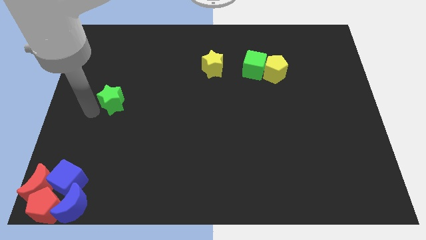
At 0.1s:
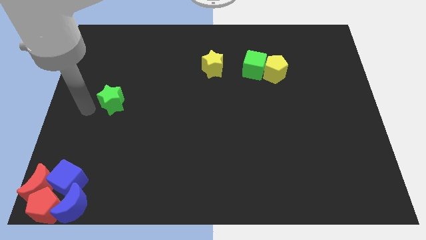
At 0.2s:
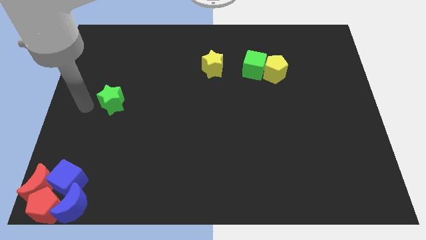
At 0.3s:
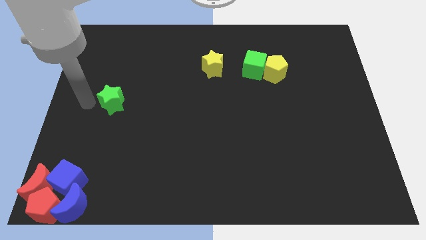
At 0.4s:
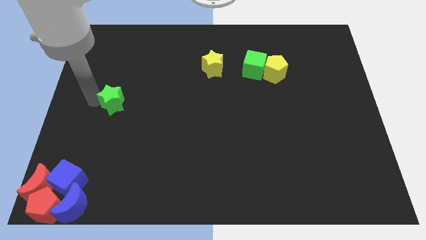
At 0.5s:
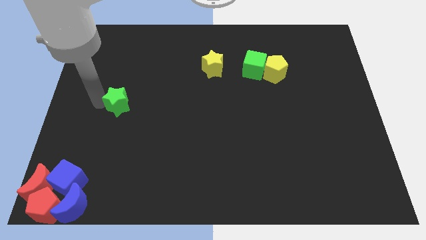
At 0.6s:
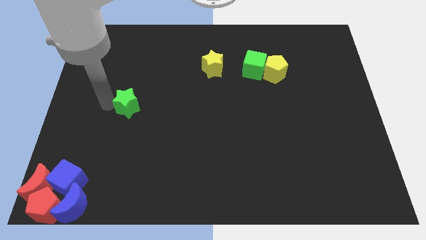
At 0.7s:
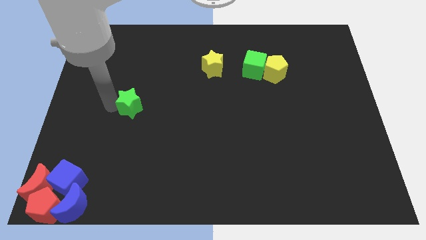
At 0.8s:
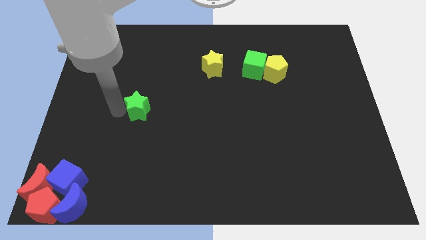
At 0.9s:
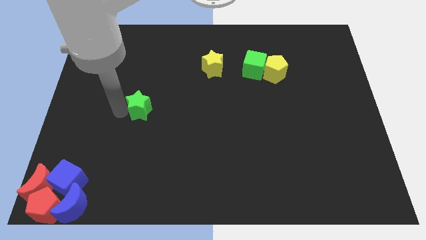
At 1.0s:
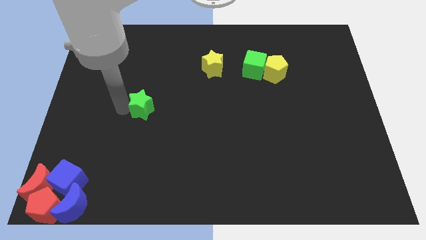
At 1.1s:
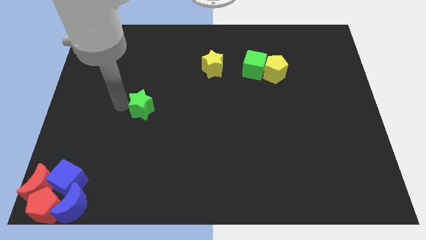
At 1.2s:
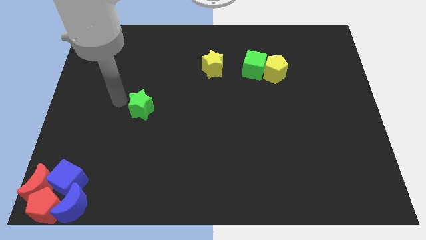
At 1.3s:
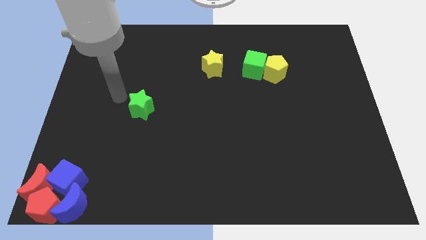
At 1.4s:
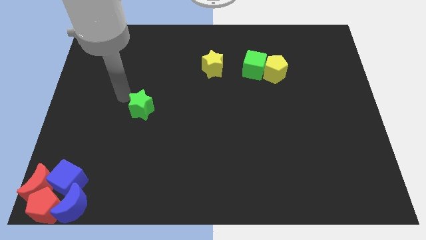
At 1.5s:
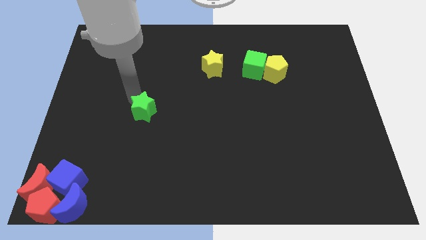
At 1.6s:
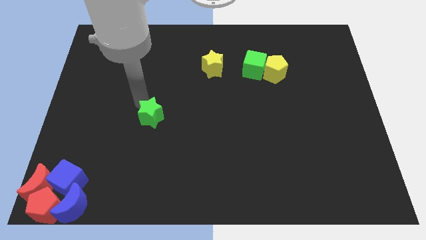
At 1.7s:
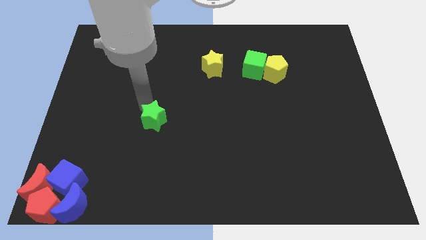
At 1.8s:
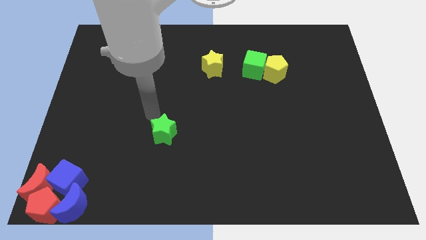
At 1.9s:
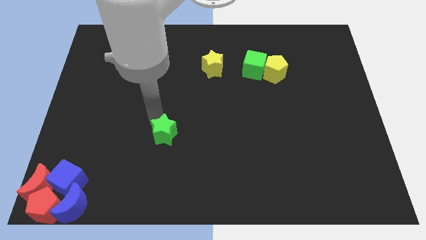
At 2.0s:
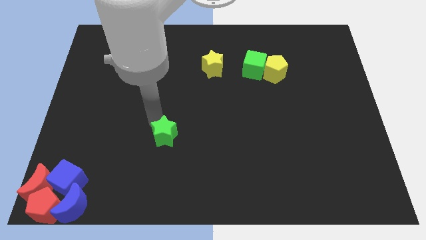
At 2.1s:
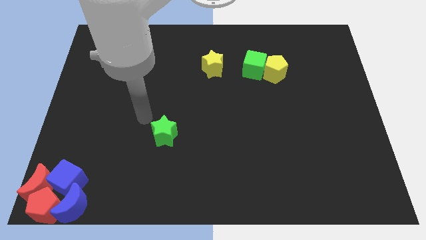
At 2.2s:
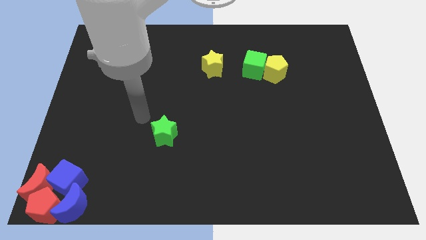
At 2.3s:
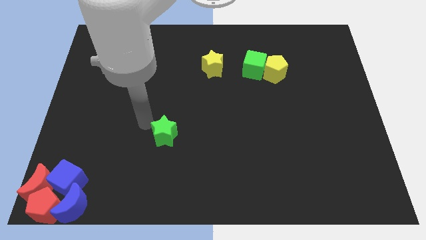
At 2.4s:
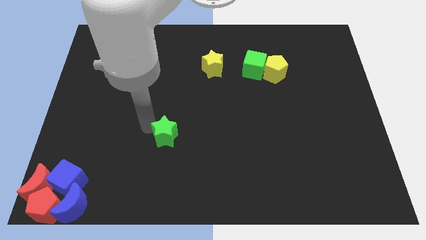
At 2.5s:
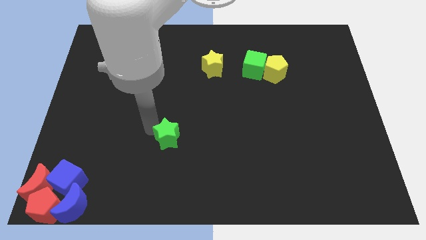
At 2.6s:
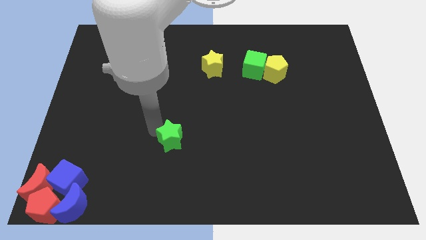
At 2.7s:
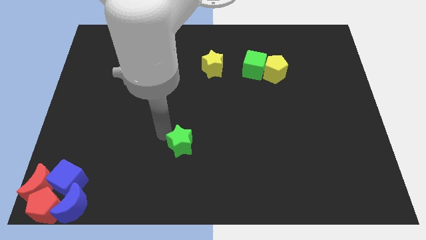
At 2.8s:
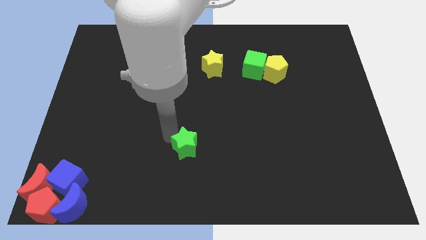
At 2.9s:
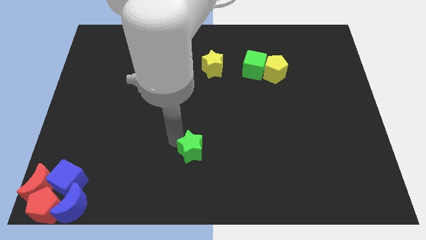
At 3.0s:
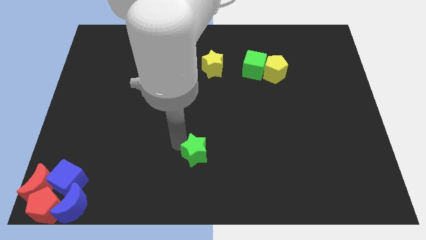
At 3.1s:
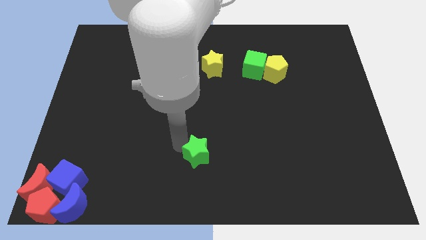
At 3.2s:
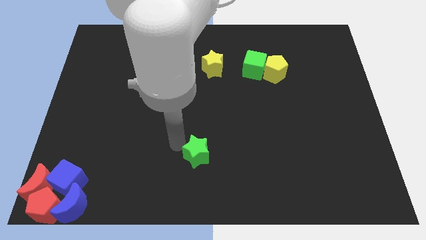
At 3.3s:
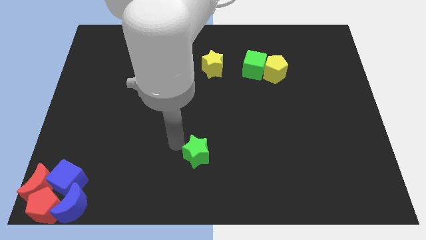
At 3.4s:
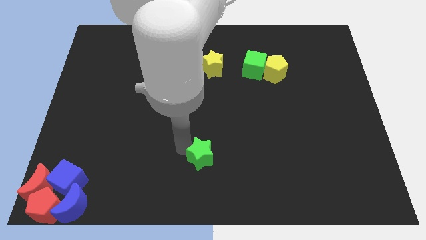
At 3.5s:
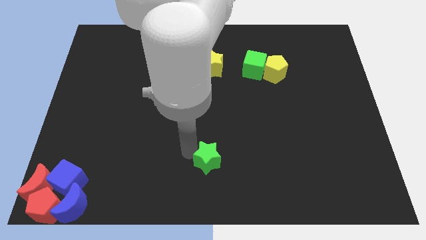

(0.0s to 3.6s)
move the green star below the yellow star at the center

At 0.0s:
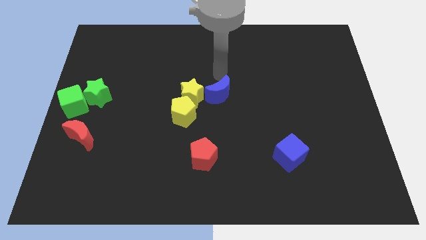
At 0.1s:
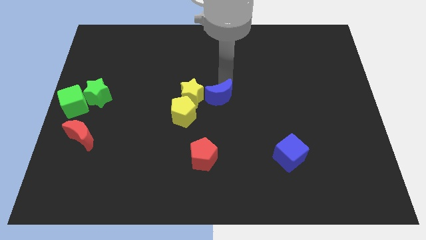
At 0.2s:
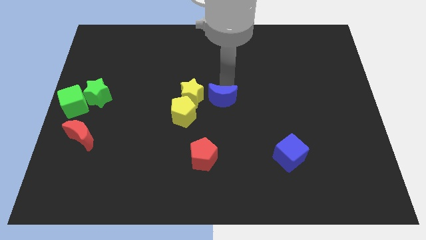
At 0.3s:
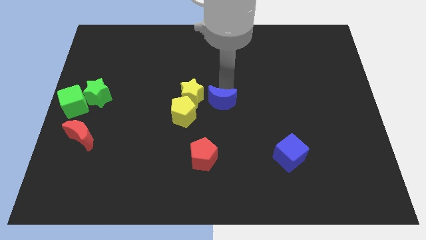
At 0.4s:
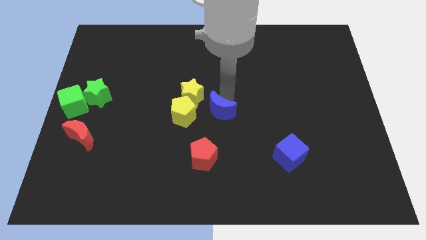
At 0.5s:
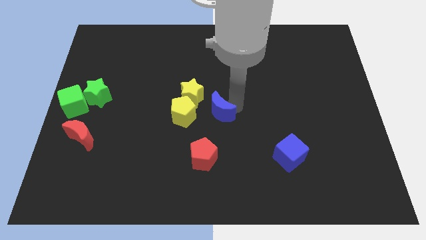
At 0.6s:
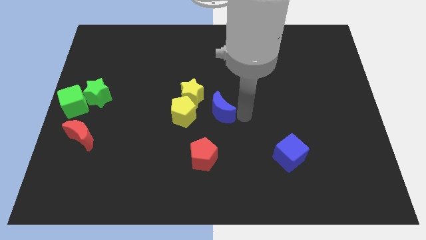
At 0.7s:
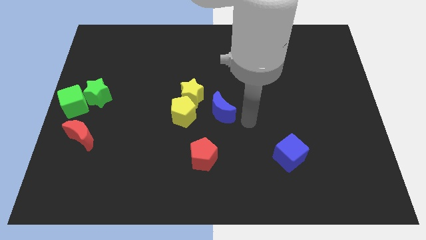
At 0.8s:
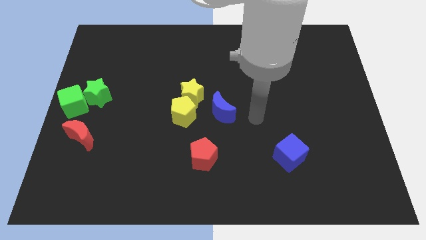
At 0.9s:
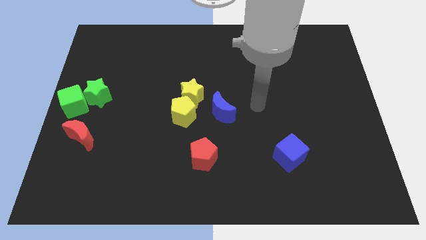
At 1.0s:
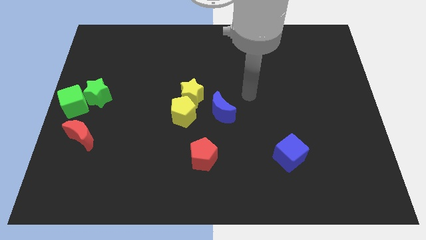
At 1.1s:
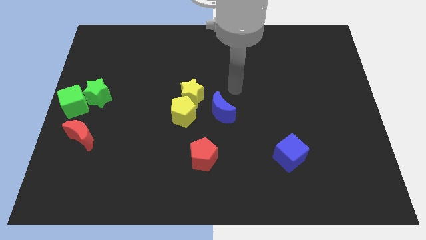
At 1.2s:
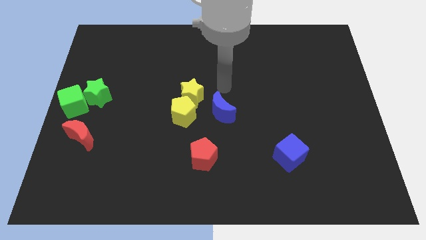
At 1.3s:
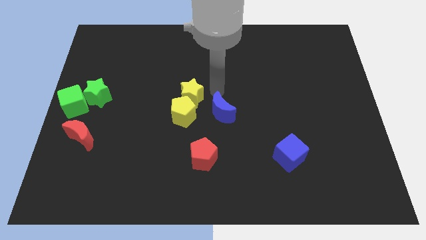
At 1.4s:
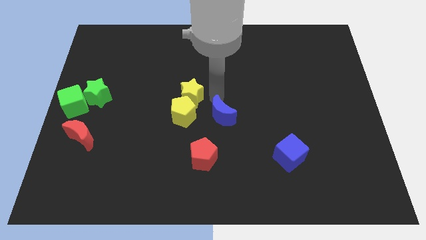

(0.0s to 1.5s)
move the blue crescent to the right of the yellow pentagon

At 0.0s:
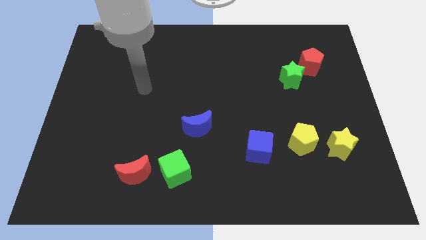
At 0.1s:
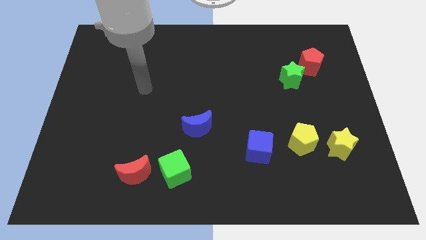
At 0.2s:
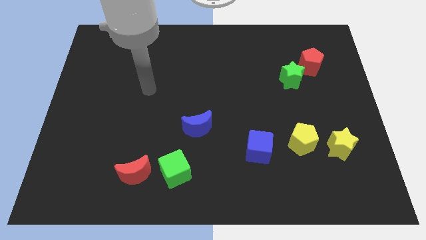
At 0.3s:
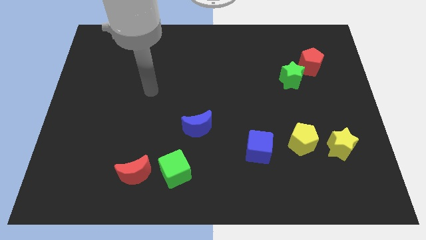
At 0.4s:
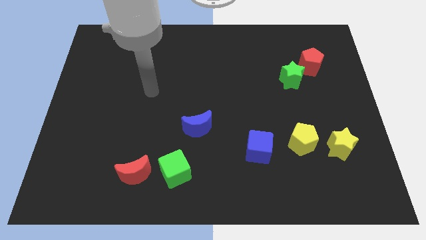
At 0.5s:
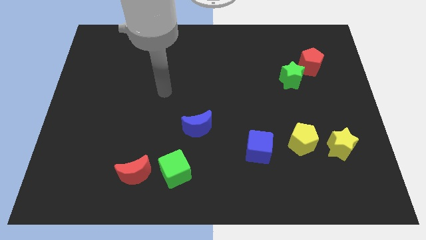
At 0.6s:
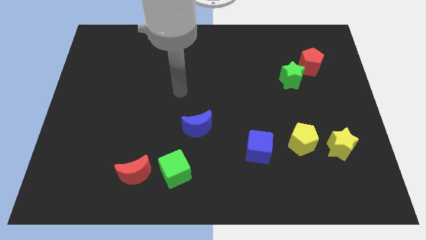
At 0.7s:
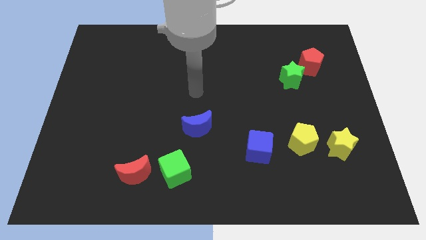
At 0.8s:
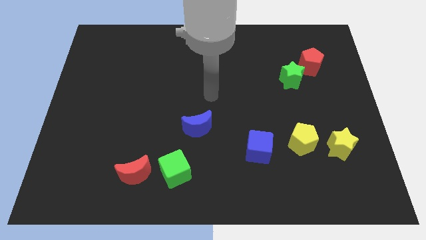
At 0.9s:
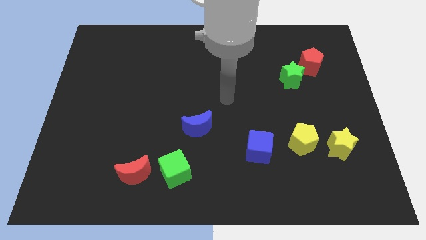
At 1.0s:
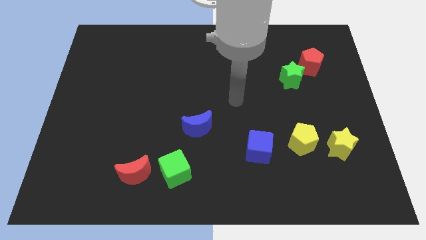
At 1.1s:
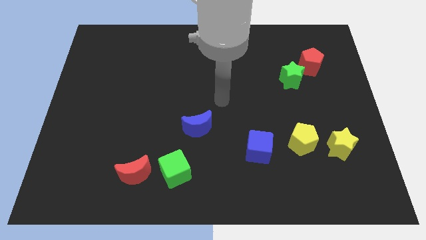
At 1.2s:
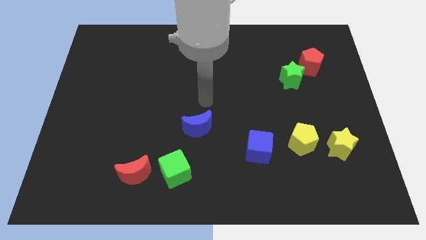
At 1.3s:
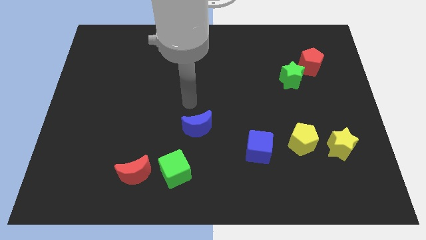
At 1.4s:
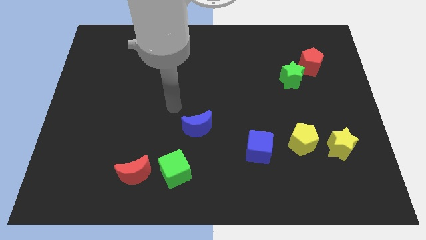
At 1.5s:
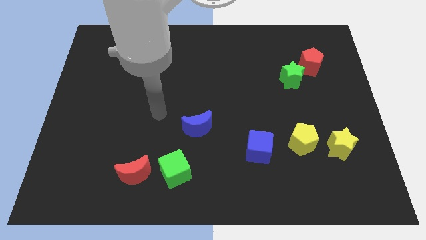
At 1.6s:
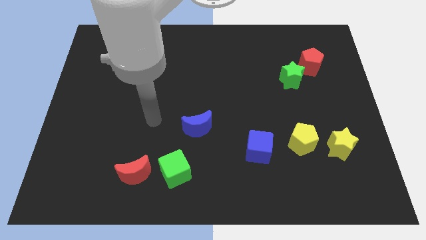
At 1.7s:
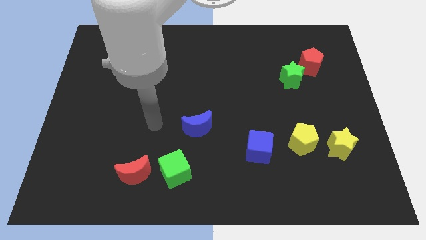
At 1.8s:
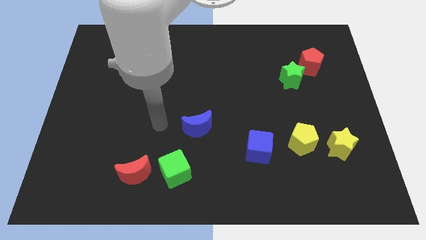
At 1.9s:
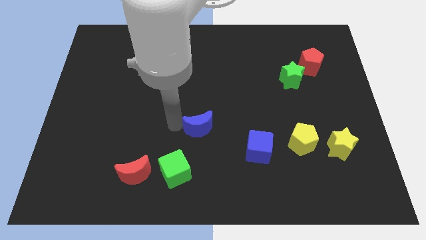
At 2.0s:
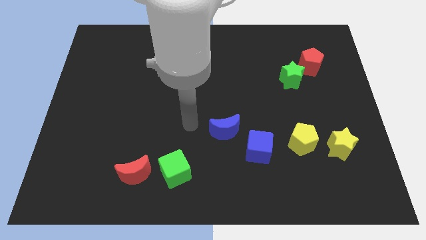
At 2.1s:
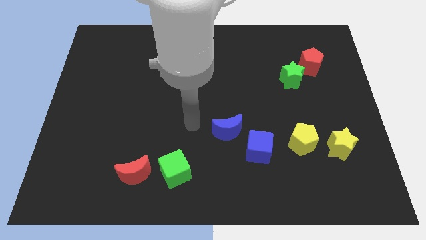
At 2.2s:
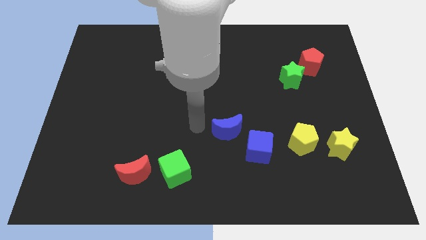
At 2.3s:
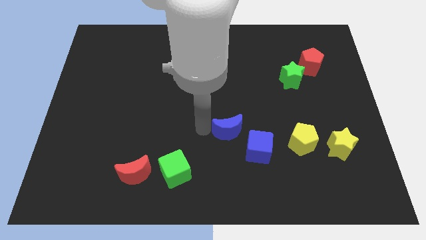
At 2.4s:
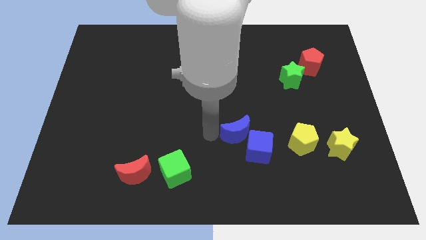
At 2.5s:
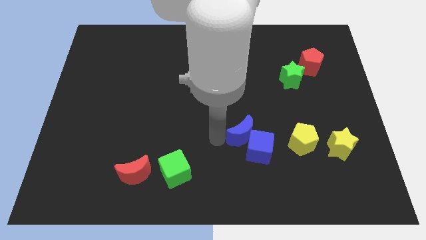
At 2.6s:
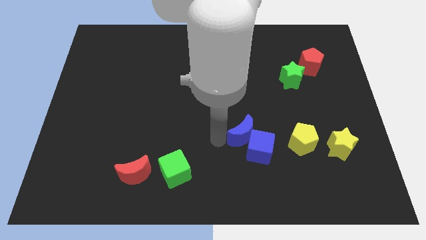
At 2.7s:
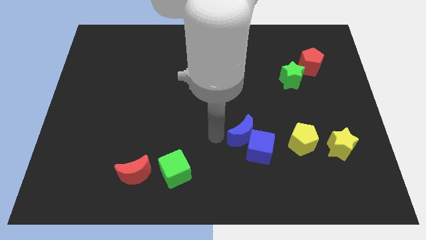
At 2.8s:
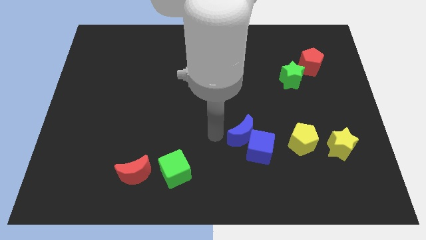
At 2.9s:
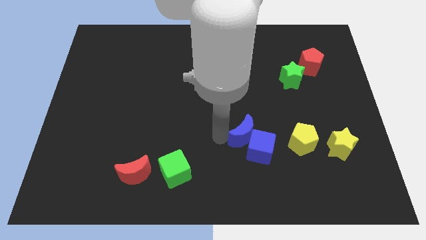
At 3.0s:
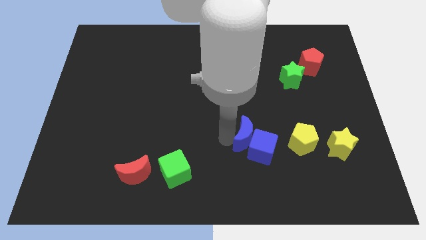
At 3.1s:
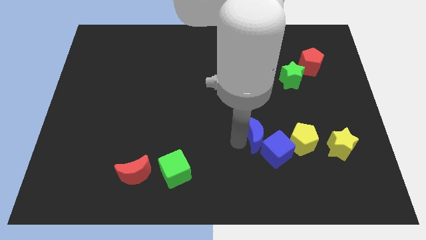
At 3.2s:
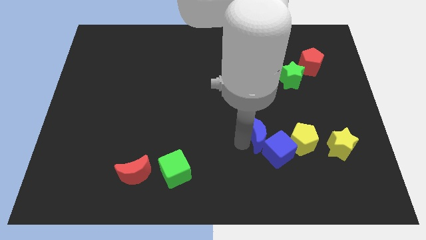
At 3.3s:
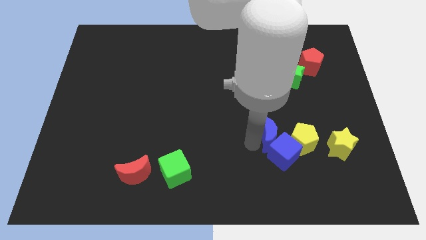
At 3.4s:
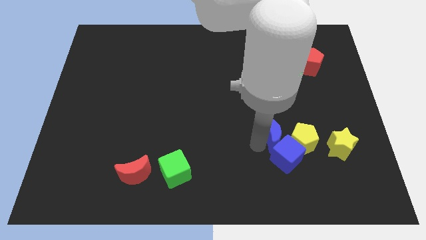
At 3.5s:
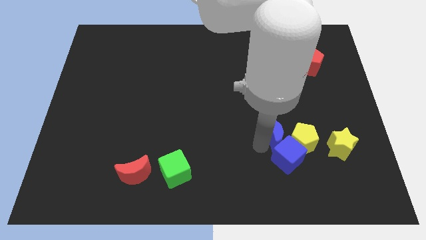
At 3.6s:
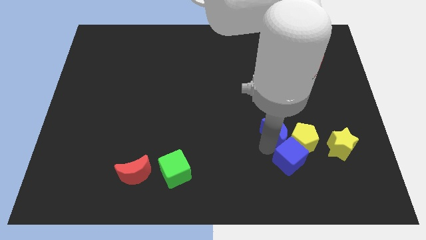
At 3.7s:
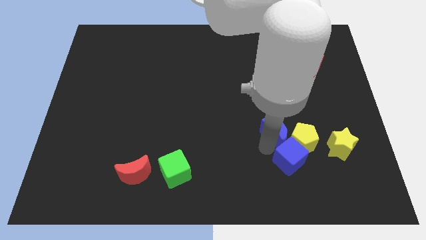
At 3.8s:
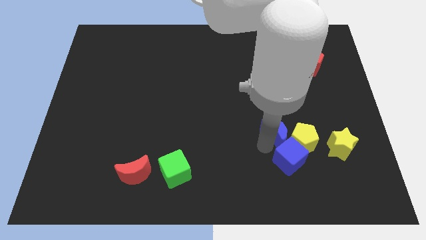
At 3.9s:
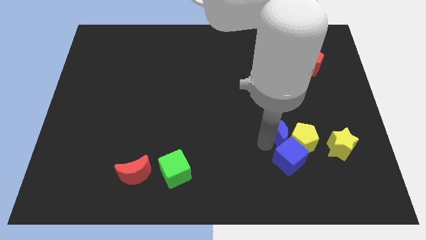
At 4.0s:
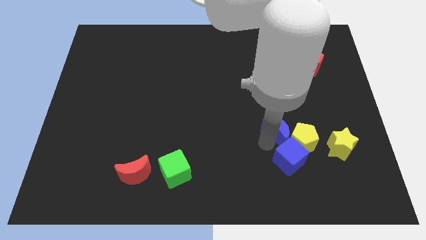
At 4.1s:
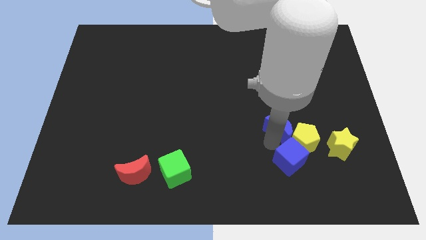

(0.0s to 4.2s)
move the blue moon and blue cube left to the yellow pentagon
